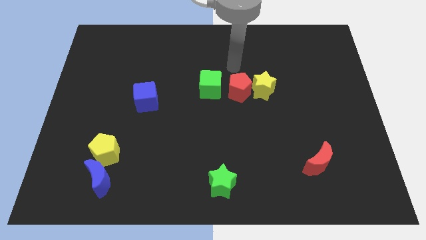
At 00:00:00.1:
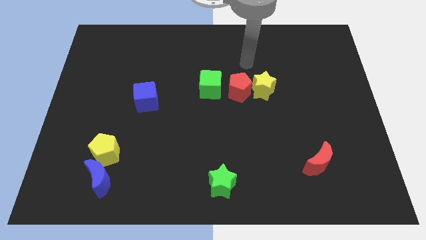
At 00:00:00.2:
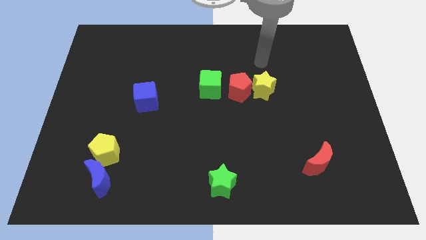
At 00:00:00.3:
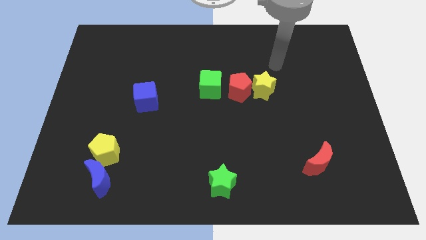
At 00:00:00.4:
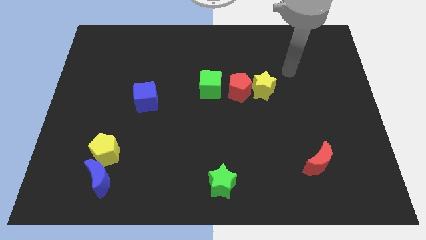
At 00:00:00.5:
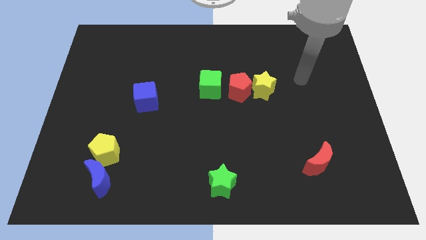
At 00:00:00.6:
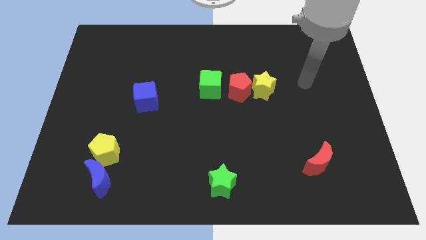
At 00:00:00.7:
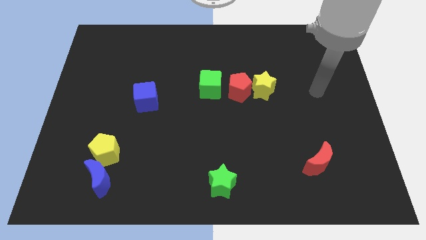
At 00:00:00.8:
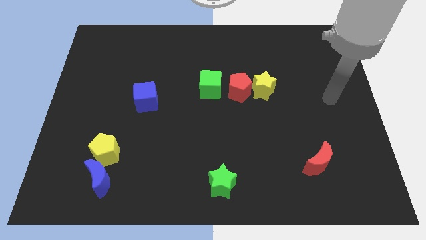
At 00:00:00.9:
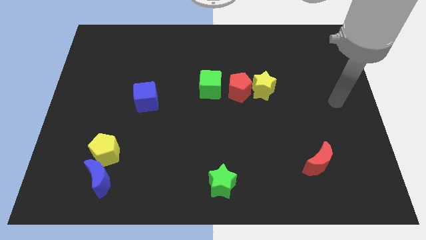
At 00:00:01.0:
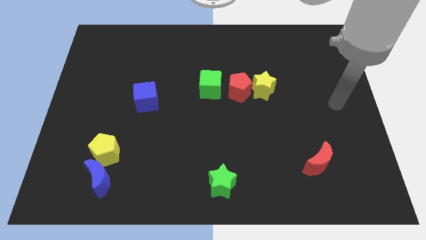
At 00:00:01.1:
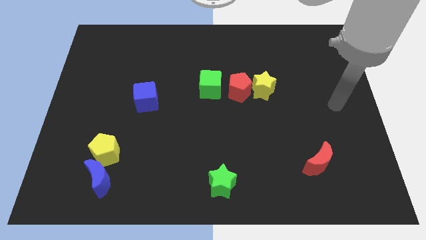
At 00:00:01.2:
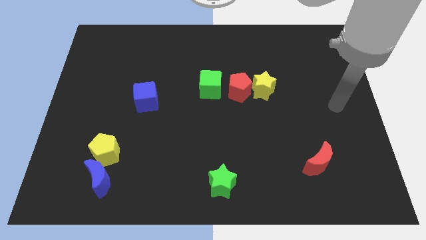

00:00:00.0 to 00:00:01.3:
place your arm to the center right side of the board

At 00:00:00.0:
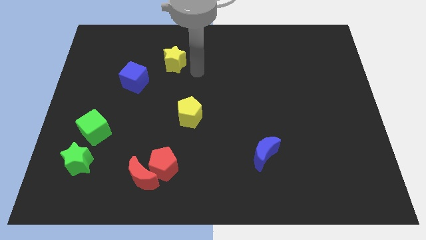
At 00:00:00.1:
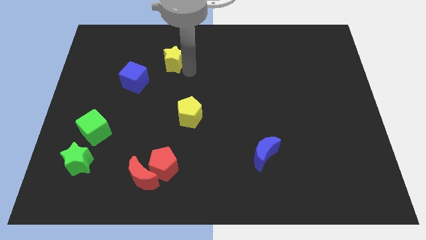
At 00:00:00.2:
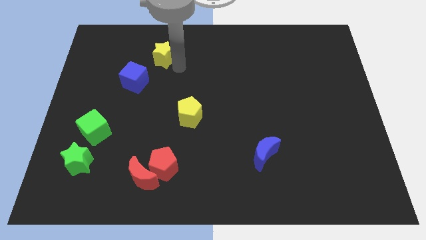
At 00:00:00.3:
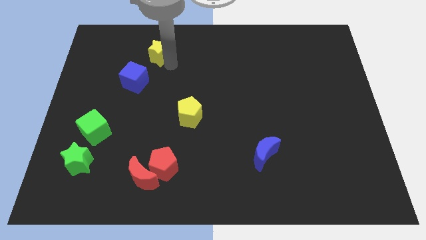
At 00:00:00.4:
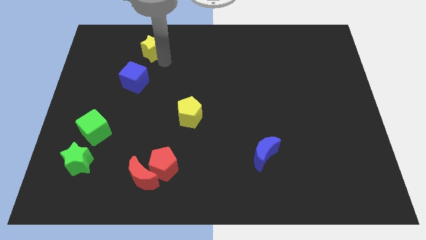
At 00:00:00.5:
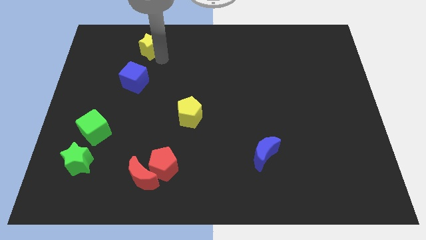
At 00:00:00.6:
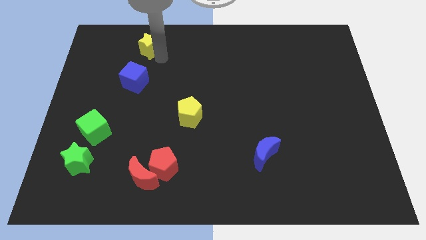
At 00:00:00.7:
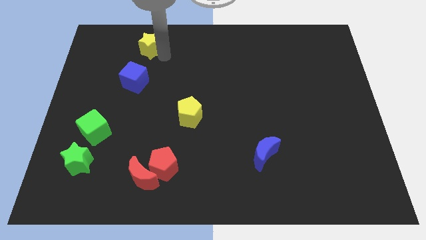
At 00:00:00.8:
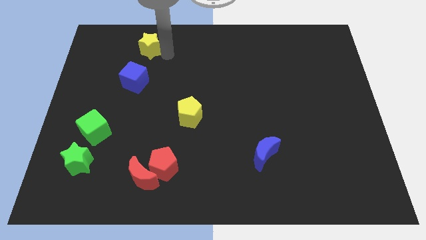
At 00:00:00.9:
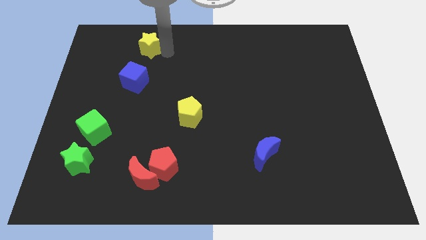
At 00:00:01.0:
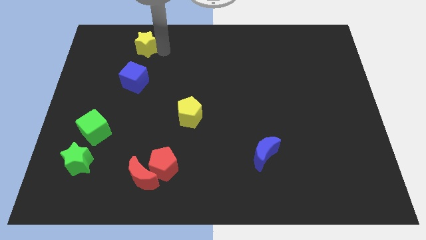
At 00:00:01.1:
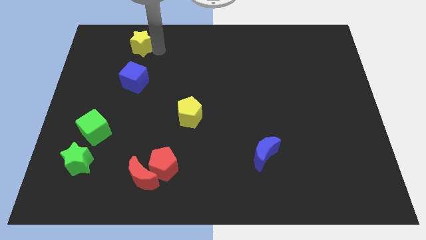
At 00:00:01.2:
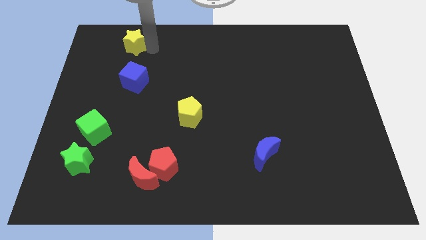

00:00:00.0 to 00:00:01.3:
place the yellow star above the blue cube

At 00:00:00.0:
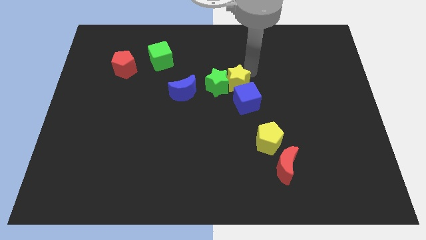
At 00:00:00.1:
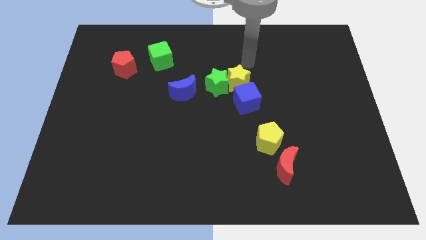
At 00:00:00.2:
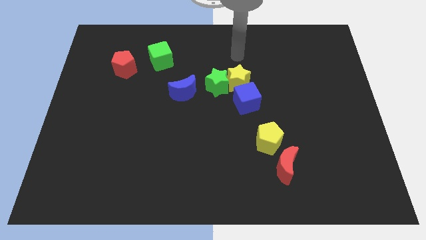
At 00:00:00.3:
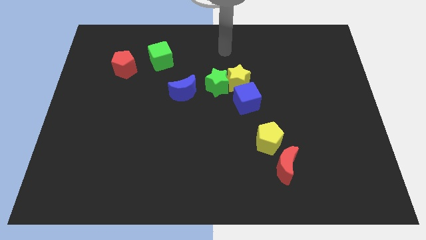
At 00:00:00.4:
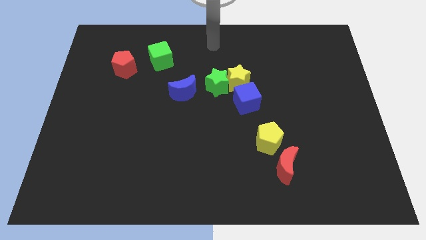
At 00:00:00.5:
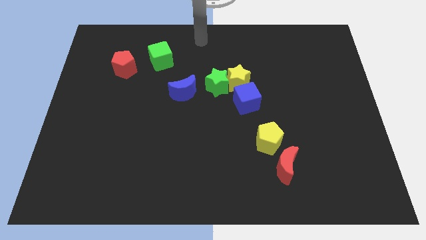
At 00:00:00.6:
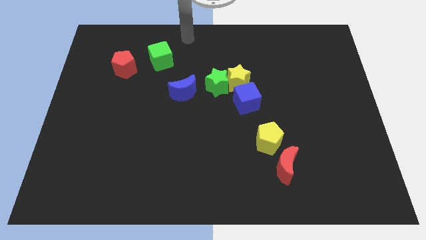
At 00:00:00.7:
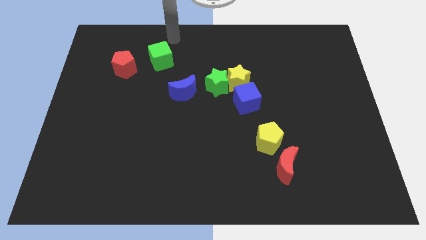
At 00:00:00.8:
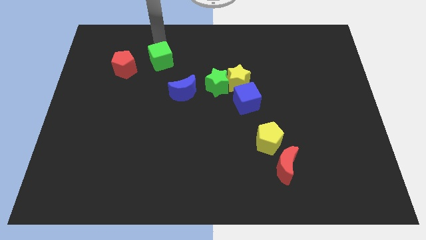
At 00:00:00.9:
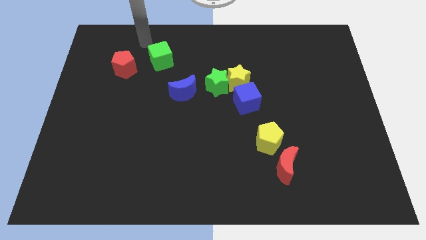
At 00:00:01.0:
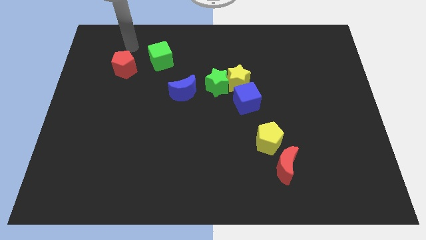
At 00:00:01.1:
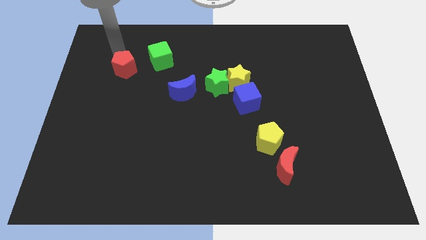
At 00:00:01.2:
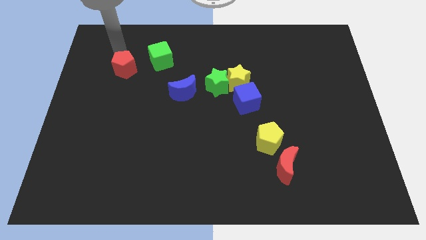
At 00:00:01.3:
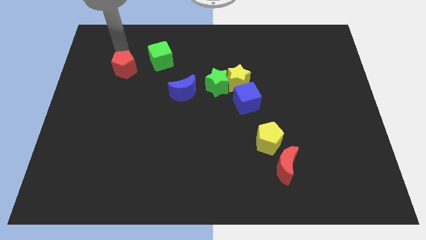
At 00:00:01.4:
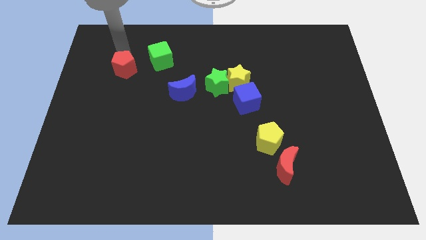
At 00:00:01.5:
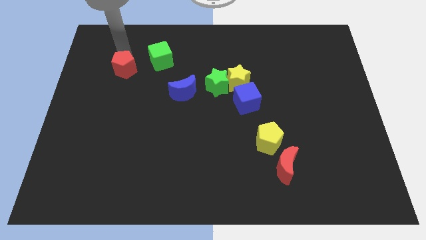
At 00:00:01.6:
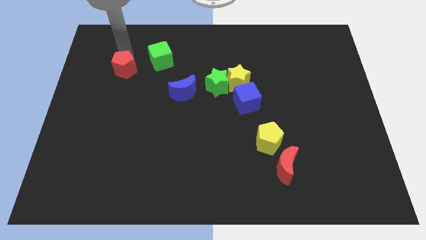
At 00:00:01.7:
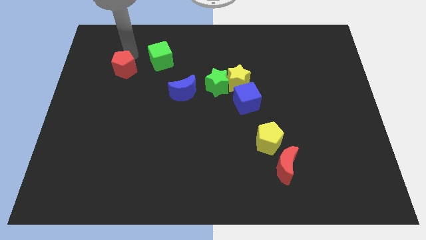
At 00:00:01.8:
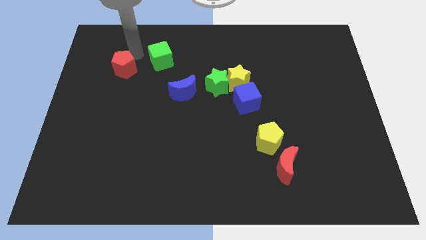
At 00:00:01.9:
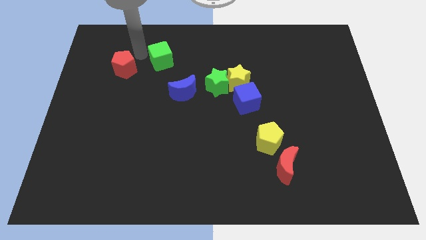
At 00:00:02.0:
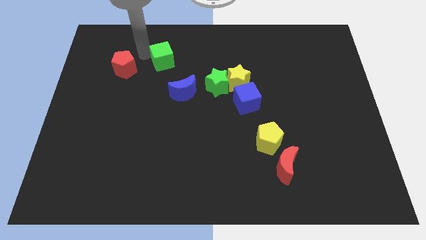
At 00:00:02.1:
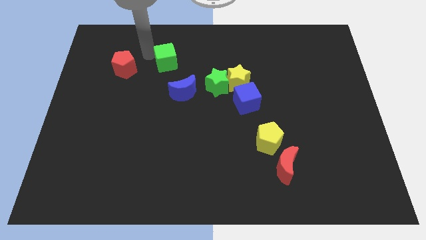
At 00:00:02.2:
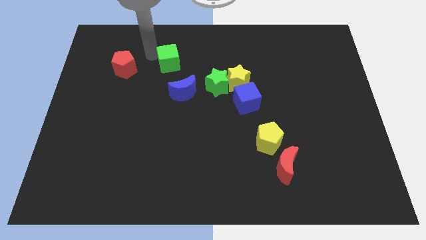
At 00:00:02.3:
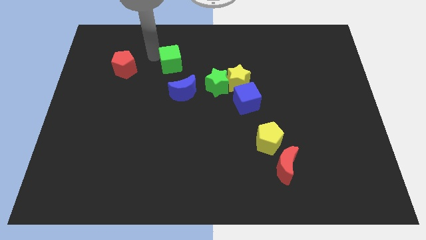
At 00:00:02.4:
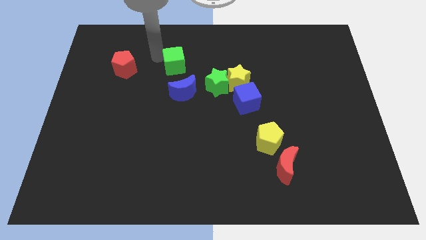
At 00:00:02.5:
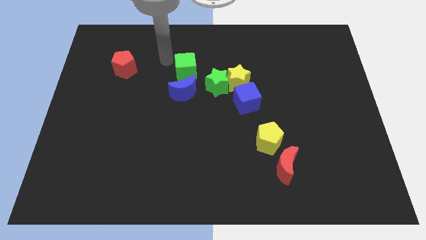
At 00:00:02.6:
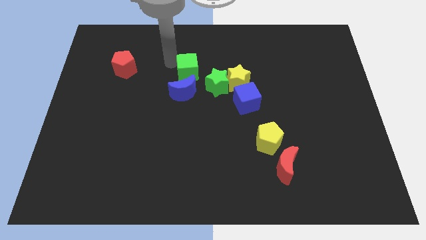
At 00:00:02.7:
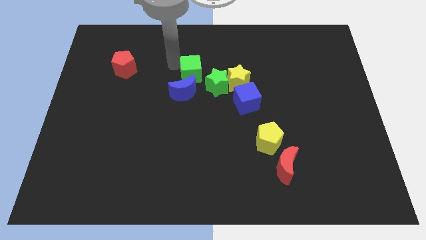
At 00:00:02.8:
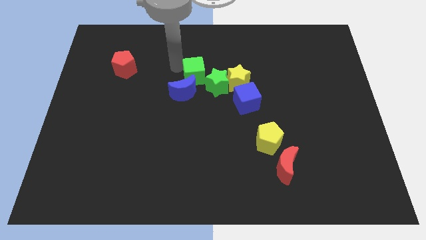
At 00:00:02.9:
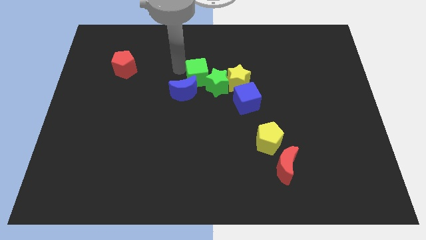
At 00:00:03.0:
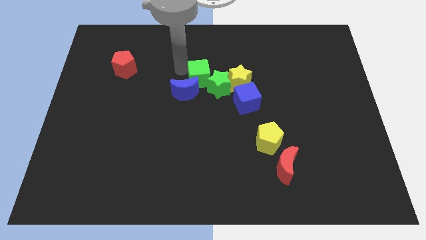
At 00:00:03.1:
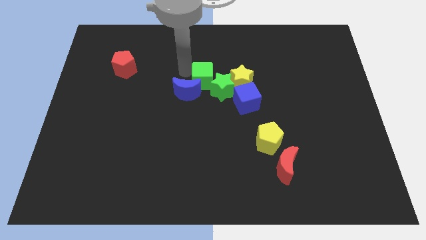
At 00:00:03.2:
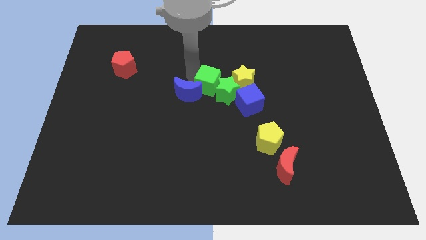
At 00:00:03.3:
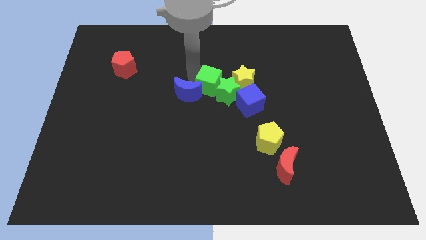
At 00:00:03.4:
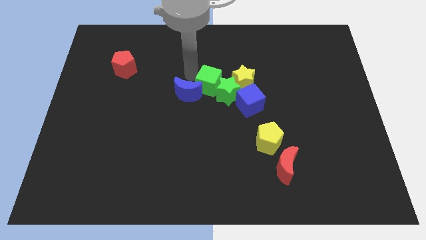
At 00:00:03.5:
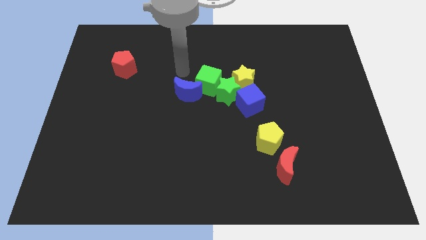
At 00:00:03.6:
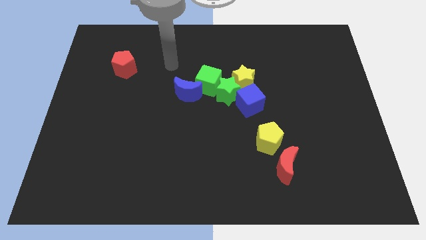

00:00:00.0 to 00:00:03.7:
move the green cube away from the red pentagon

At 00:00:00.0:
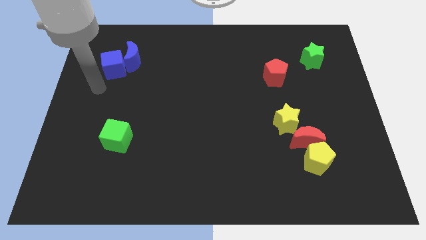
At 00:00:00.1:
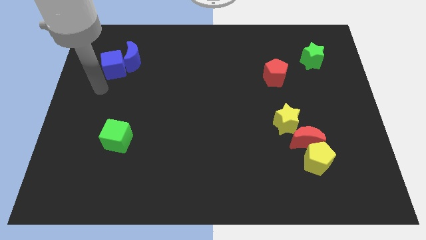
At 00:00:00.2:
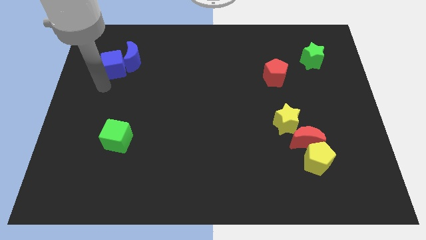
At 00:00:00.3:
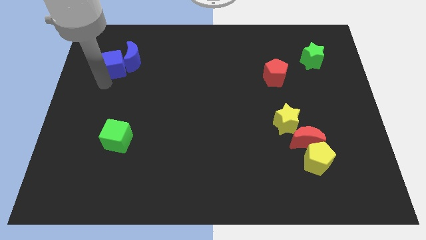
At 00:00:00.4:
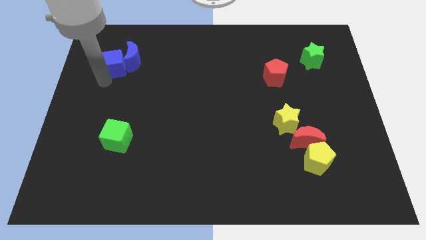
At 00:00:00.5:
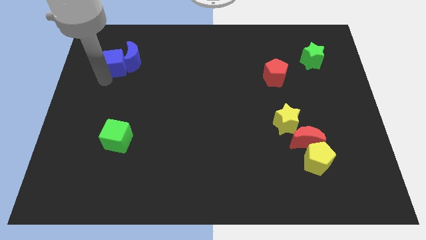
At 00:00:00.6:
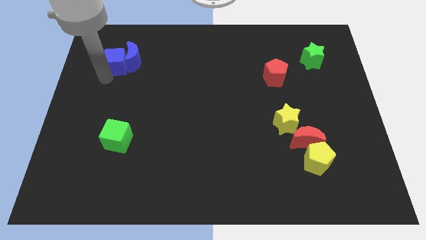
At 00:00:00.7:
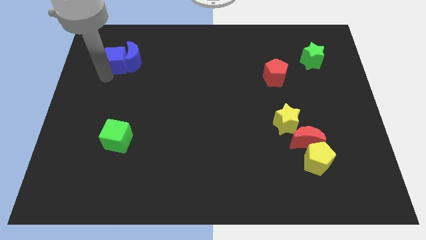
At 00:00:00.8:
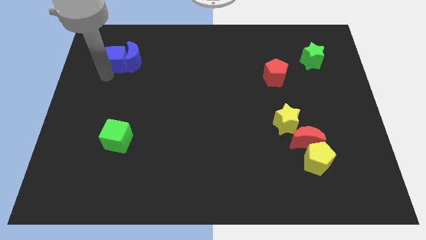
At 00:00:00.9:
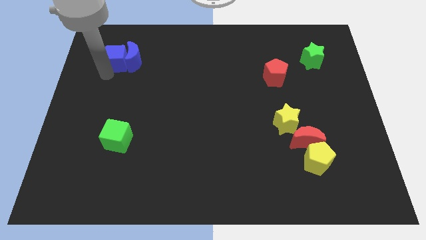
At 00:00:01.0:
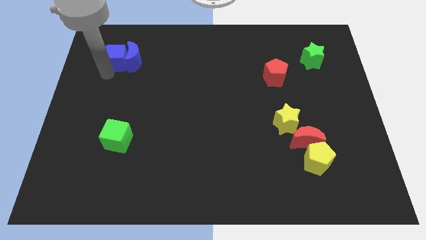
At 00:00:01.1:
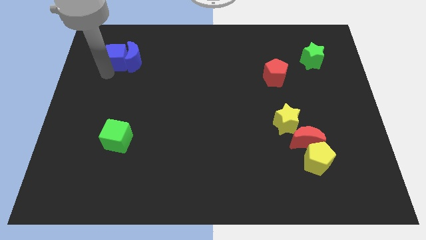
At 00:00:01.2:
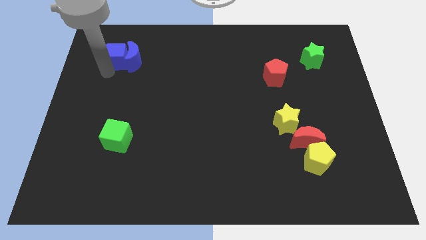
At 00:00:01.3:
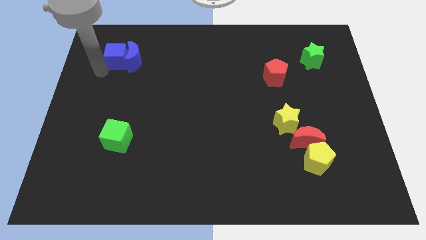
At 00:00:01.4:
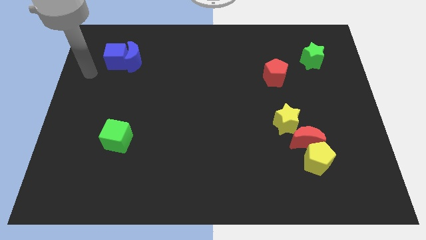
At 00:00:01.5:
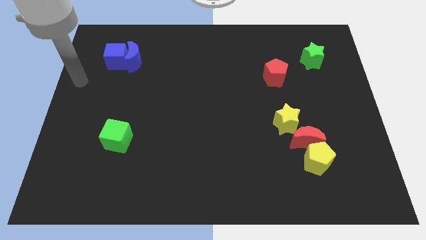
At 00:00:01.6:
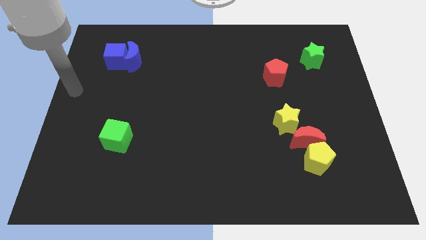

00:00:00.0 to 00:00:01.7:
place blue cube to the left of blue crescent

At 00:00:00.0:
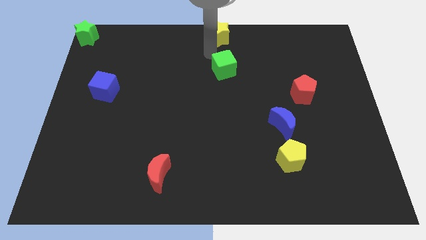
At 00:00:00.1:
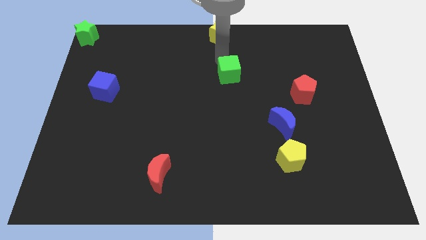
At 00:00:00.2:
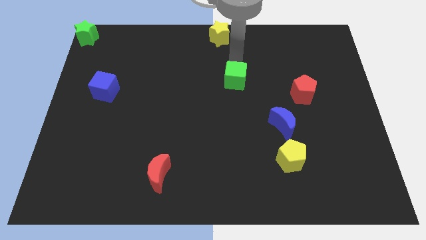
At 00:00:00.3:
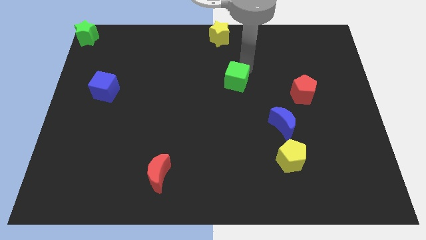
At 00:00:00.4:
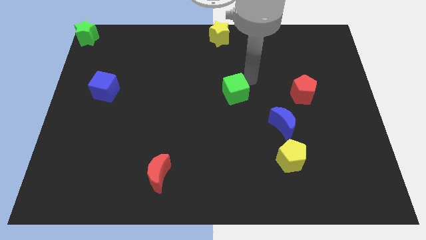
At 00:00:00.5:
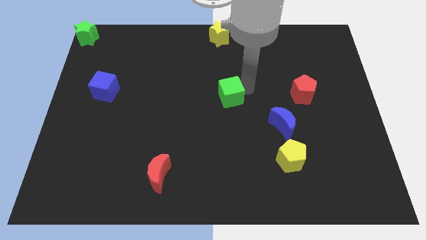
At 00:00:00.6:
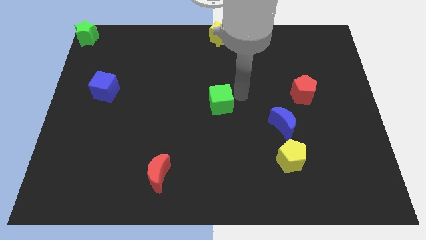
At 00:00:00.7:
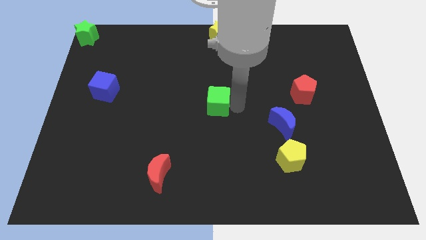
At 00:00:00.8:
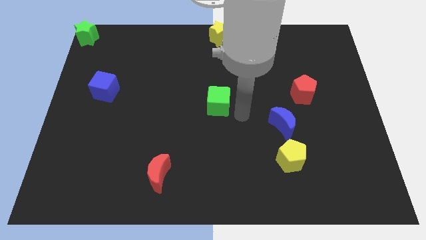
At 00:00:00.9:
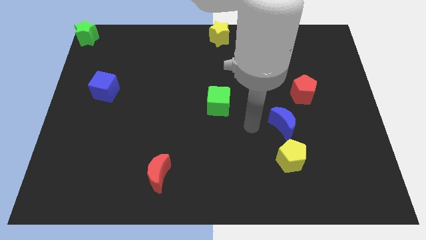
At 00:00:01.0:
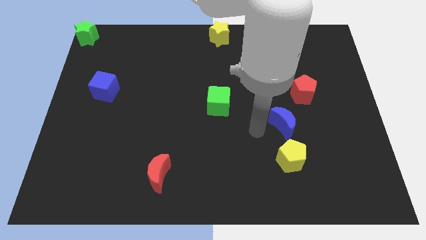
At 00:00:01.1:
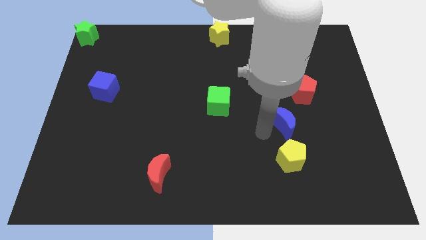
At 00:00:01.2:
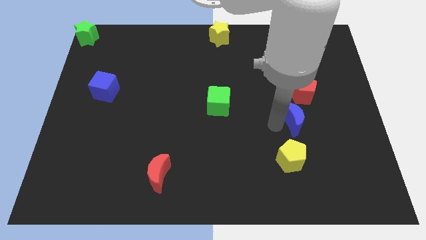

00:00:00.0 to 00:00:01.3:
move the green cube to the center of the board
